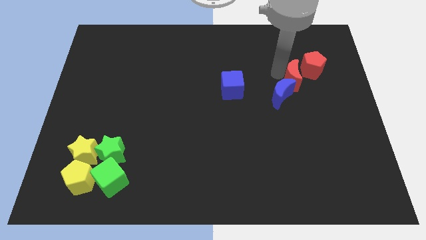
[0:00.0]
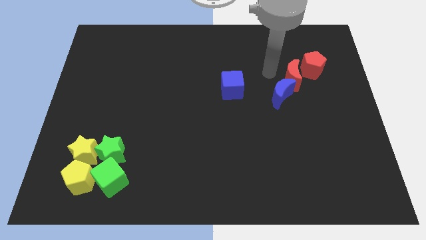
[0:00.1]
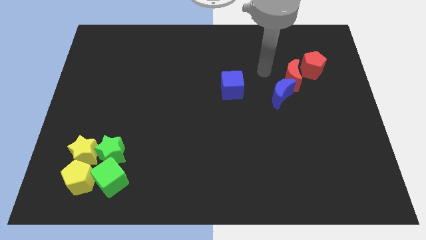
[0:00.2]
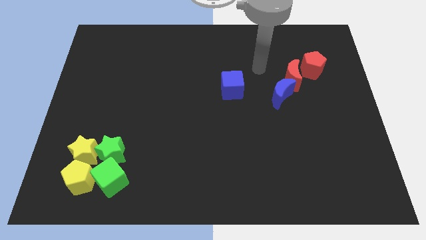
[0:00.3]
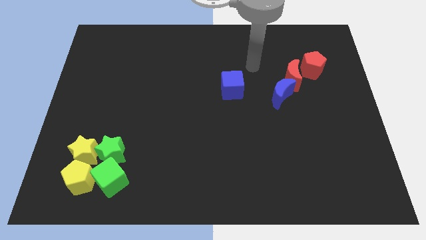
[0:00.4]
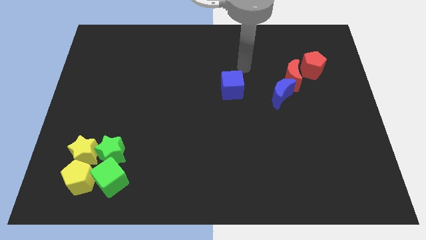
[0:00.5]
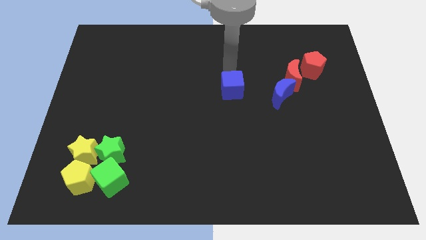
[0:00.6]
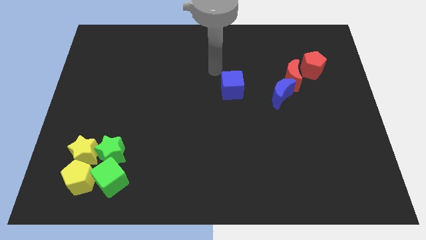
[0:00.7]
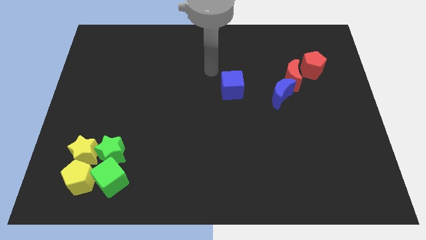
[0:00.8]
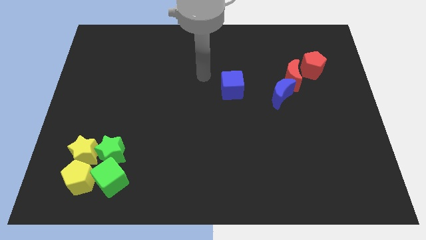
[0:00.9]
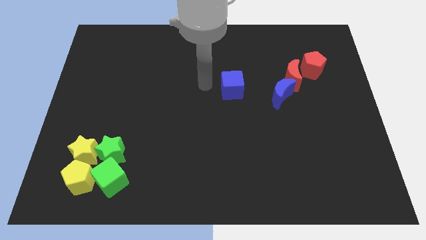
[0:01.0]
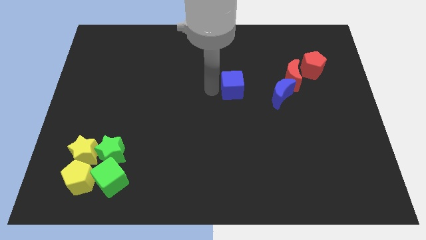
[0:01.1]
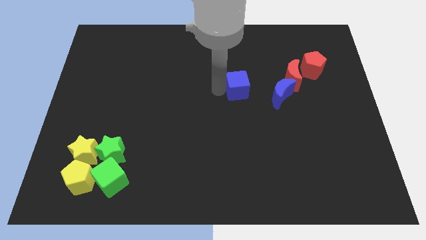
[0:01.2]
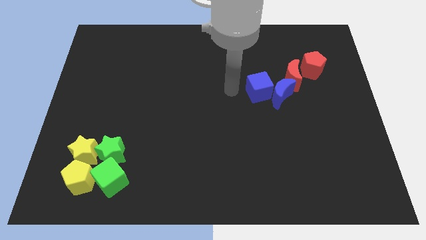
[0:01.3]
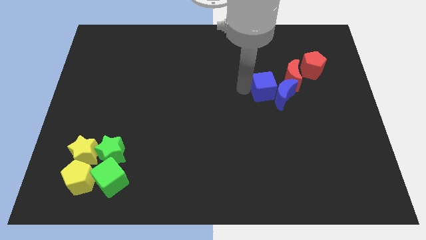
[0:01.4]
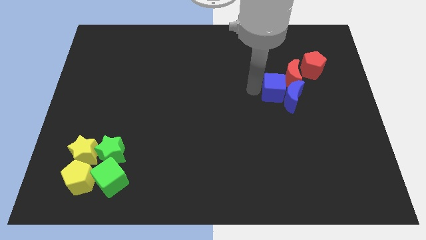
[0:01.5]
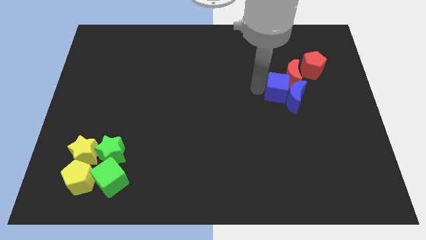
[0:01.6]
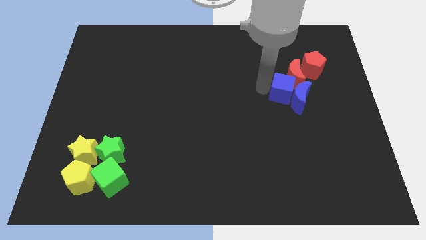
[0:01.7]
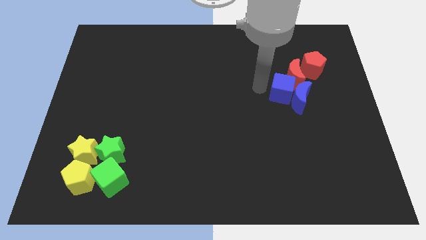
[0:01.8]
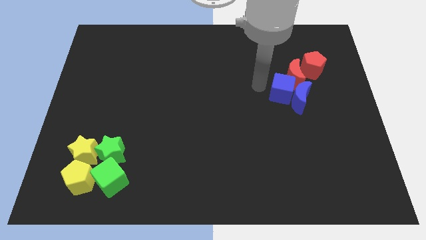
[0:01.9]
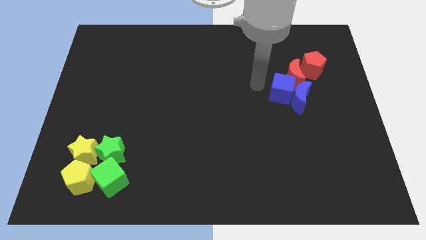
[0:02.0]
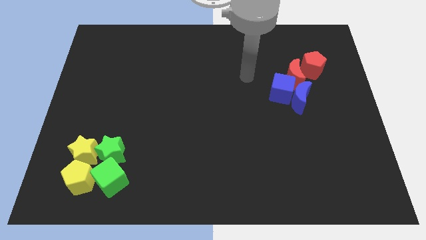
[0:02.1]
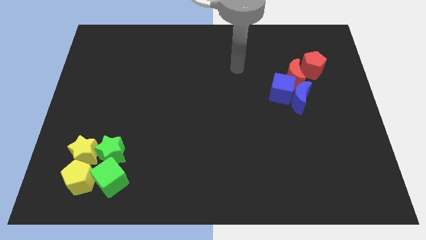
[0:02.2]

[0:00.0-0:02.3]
move the blue cube towards the blue crescent

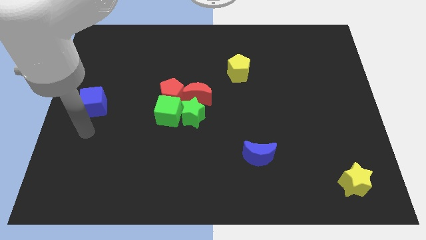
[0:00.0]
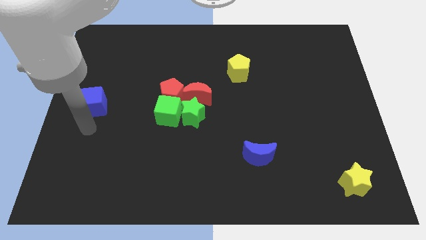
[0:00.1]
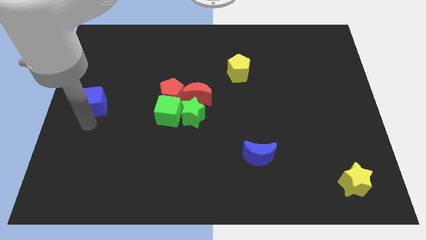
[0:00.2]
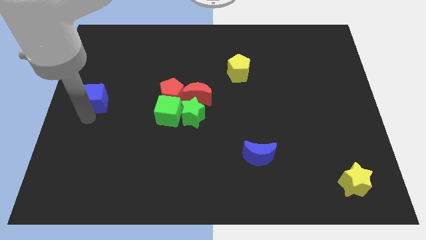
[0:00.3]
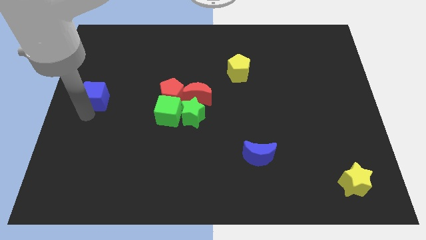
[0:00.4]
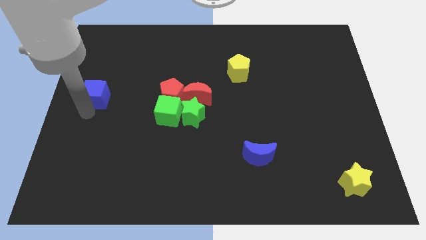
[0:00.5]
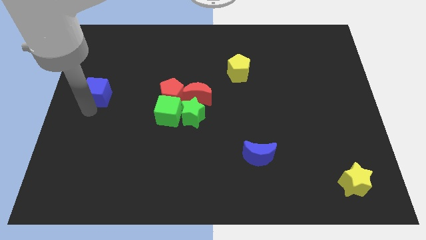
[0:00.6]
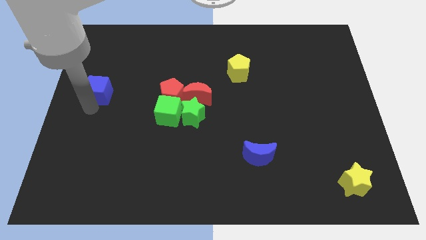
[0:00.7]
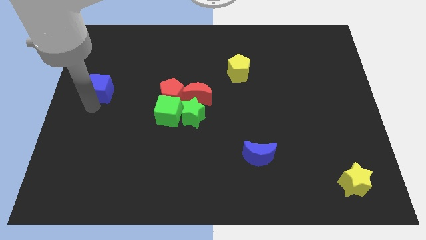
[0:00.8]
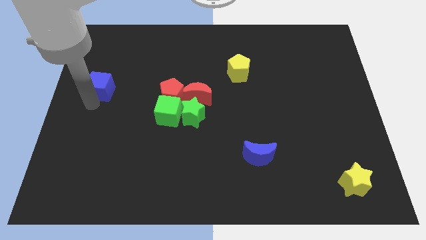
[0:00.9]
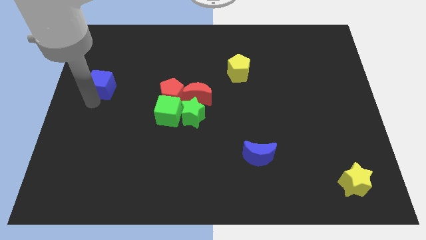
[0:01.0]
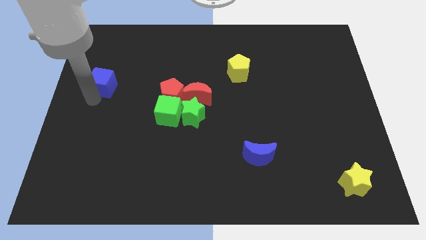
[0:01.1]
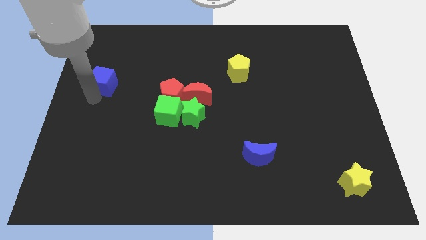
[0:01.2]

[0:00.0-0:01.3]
move blue cube upwards in the board

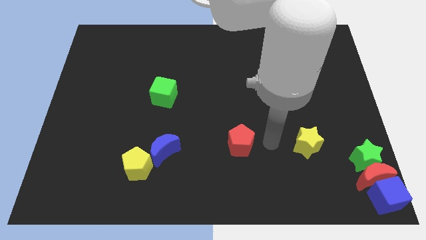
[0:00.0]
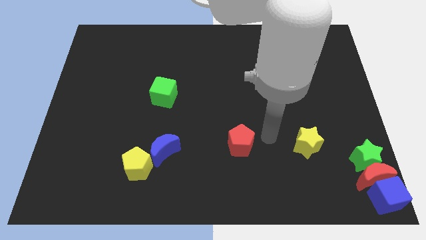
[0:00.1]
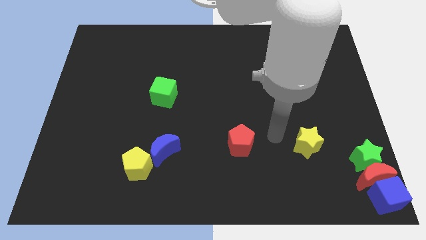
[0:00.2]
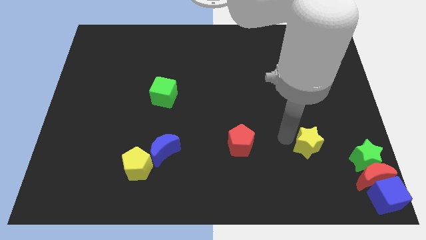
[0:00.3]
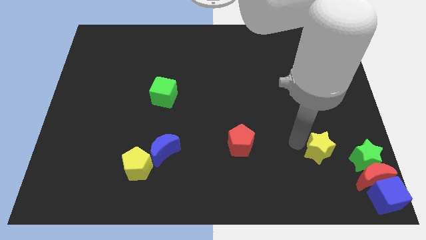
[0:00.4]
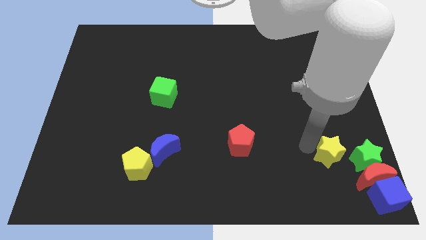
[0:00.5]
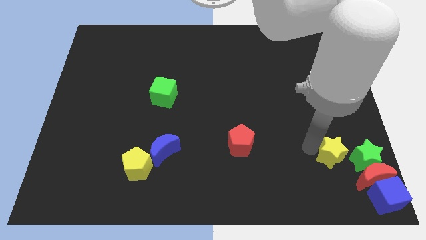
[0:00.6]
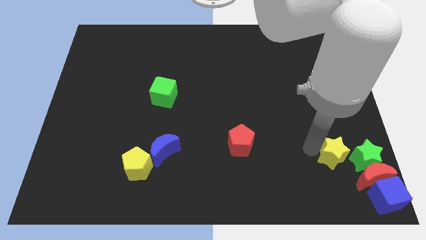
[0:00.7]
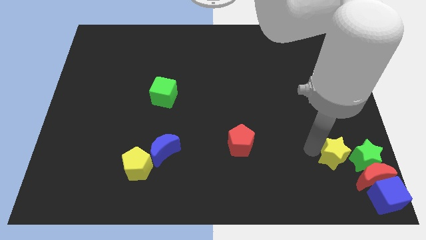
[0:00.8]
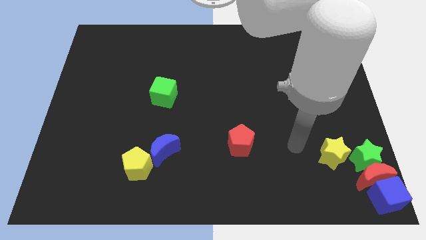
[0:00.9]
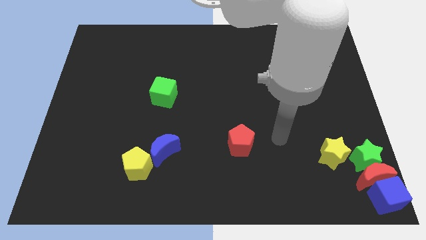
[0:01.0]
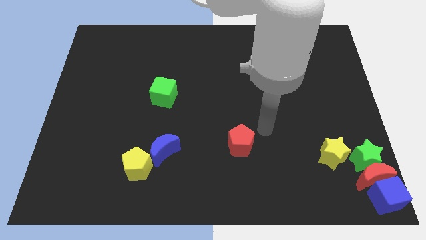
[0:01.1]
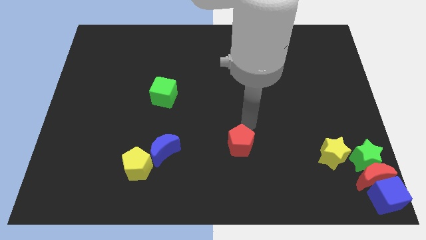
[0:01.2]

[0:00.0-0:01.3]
move the yellow star to the left side of the green star

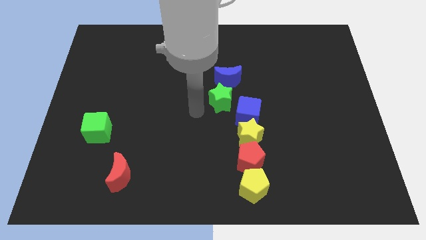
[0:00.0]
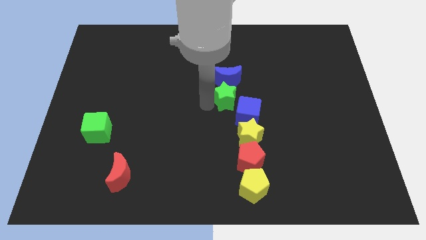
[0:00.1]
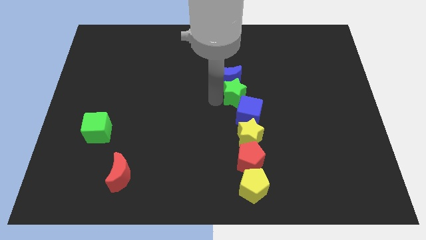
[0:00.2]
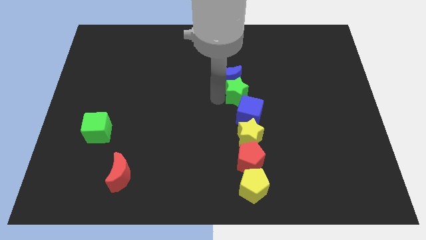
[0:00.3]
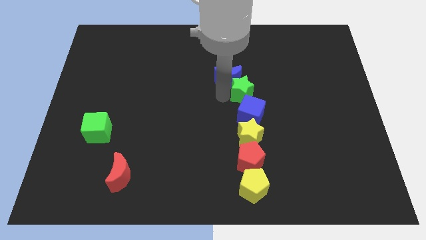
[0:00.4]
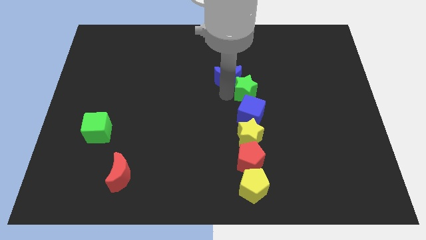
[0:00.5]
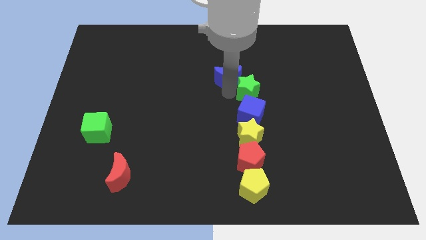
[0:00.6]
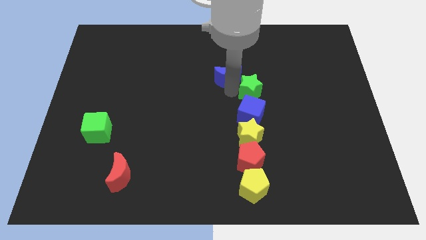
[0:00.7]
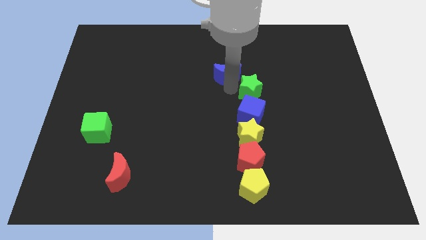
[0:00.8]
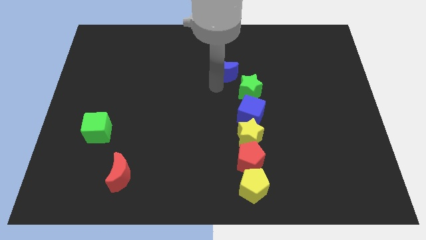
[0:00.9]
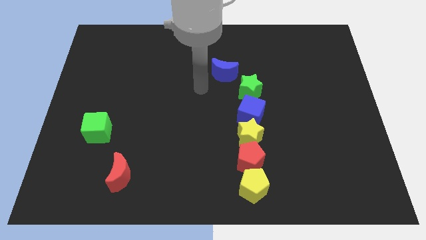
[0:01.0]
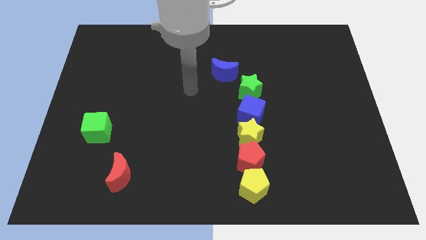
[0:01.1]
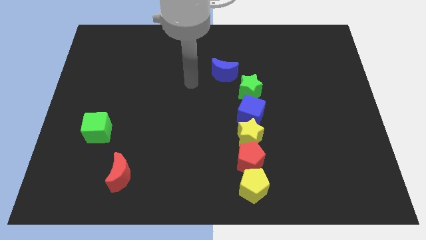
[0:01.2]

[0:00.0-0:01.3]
place the green star above the blue cube

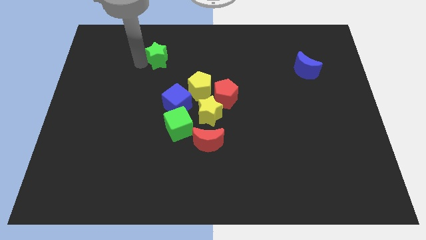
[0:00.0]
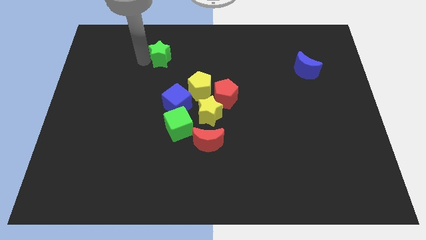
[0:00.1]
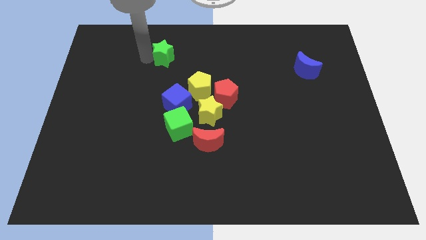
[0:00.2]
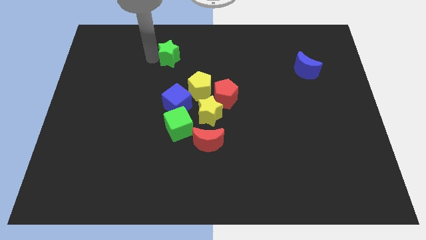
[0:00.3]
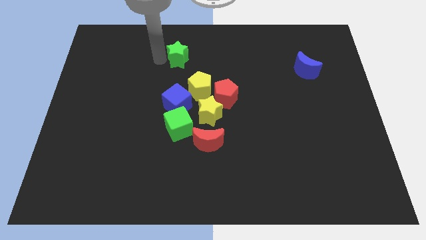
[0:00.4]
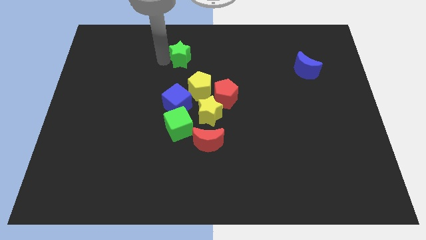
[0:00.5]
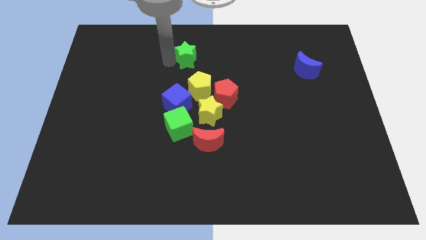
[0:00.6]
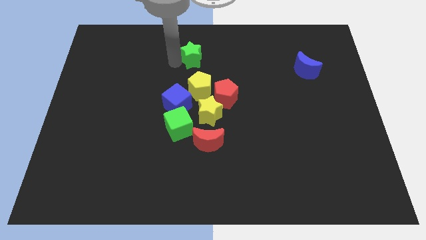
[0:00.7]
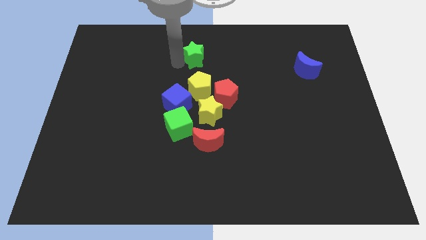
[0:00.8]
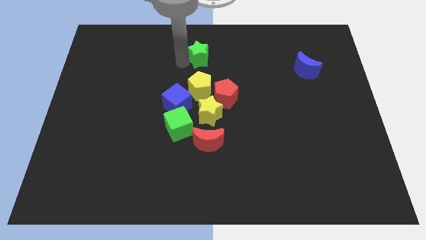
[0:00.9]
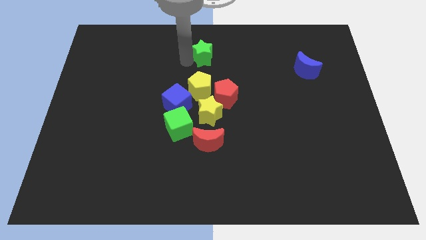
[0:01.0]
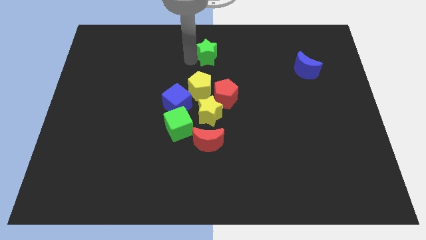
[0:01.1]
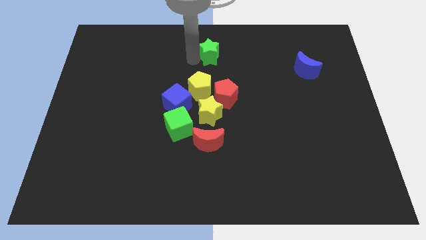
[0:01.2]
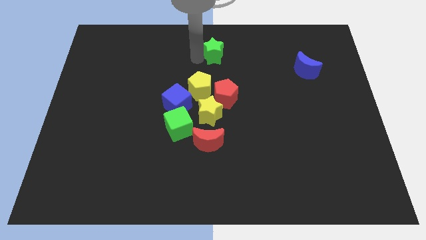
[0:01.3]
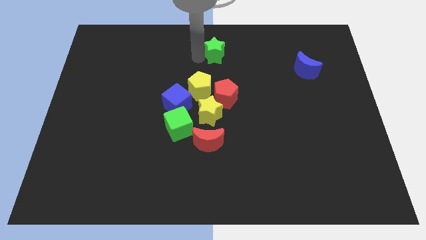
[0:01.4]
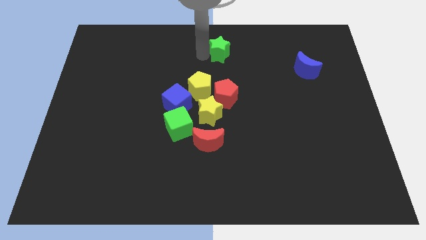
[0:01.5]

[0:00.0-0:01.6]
move the green star to the top center

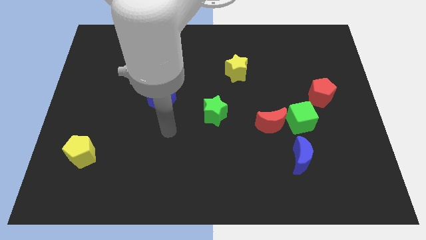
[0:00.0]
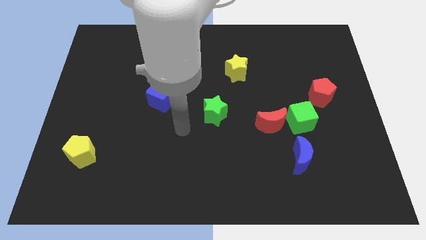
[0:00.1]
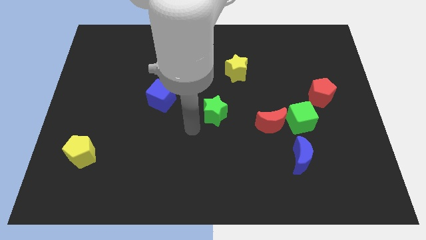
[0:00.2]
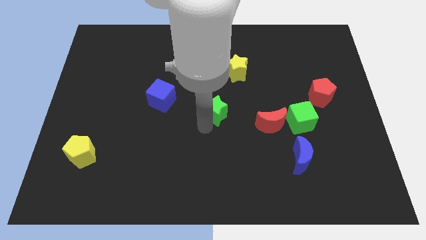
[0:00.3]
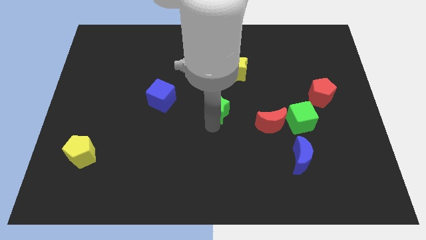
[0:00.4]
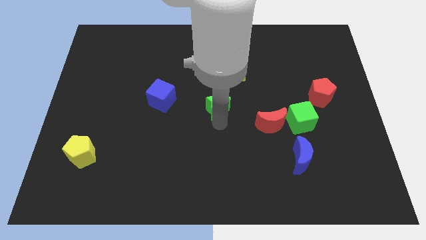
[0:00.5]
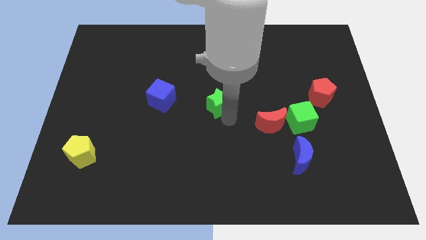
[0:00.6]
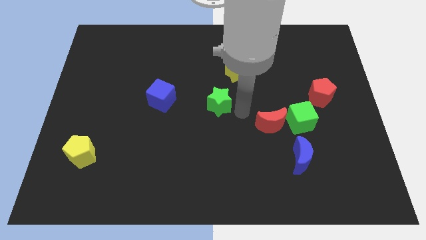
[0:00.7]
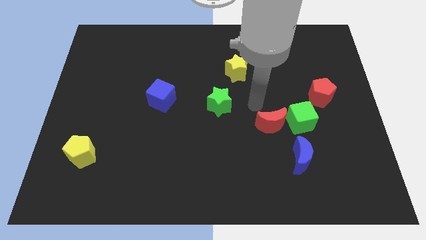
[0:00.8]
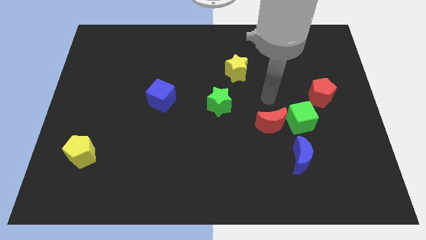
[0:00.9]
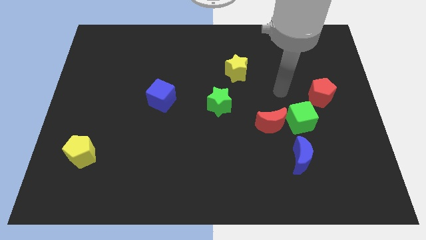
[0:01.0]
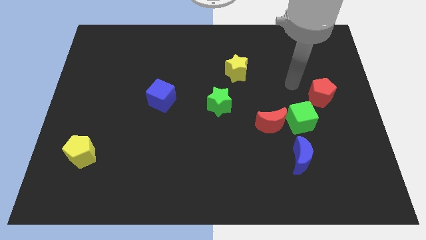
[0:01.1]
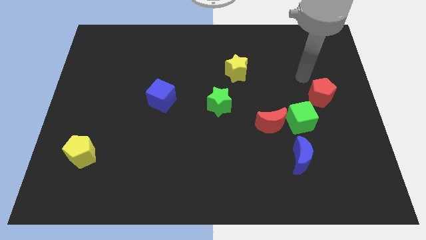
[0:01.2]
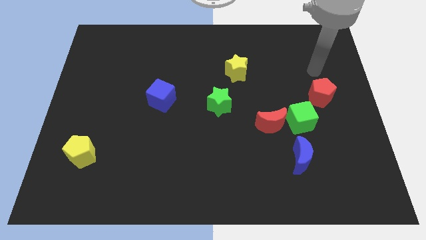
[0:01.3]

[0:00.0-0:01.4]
move the green star parallel to the right of the blue cube
